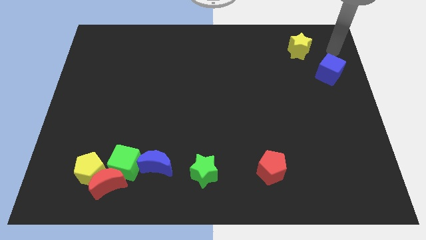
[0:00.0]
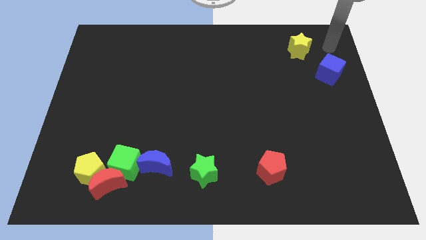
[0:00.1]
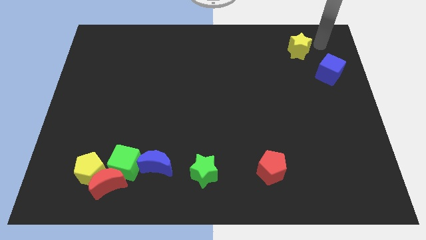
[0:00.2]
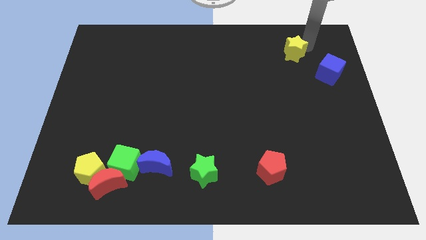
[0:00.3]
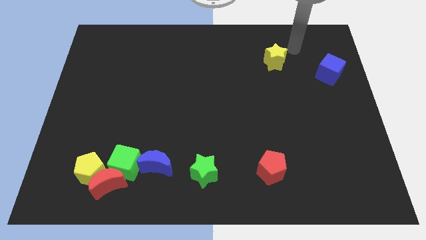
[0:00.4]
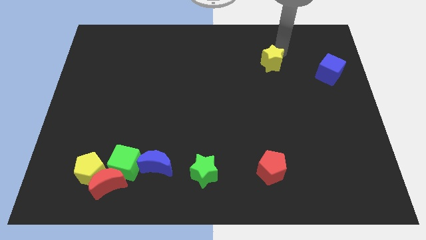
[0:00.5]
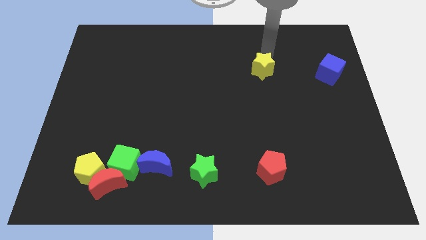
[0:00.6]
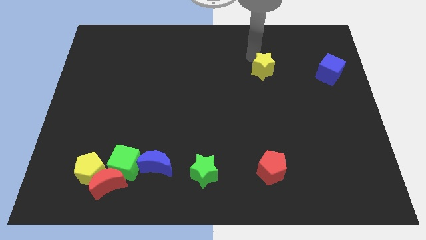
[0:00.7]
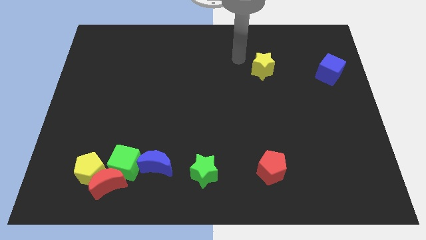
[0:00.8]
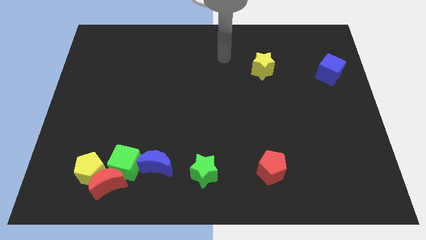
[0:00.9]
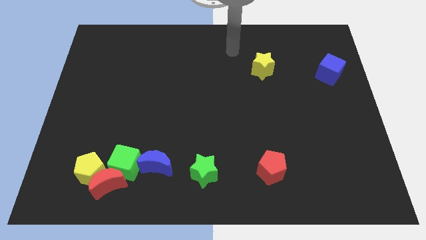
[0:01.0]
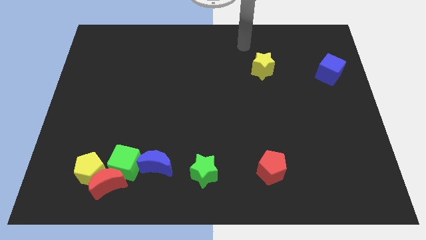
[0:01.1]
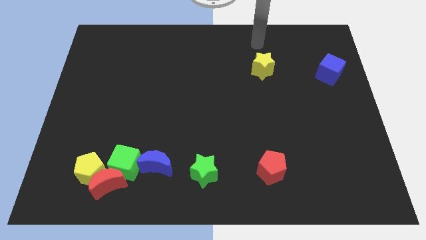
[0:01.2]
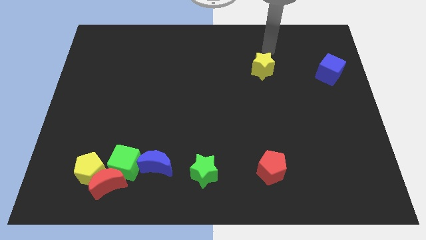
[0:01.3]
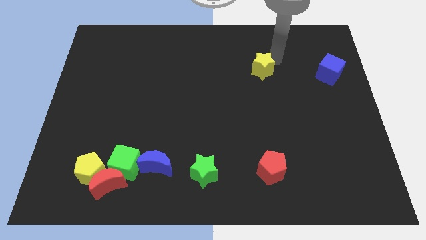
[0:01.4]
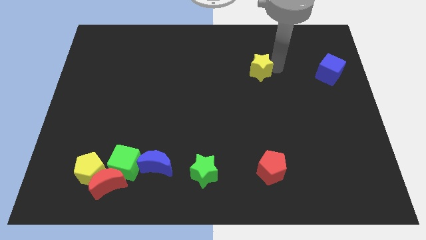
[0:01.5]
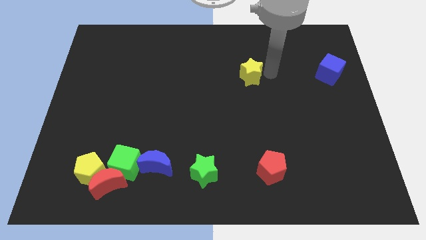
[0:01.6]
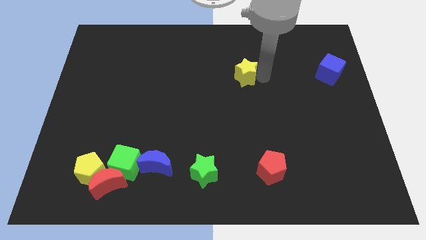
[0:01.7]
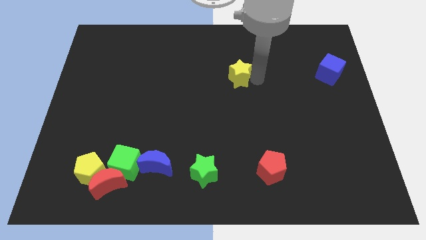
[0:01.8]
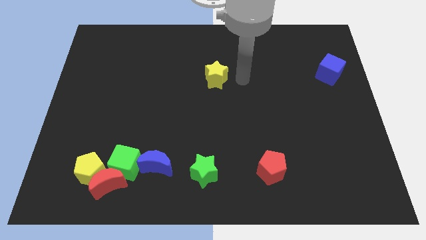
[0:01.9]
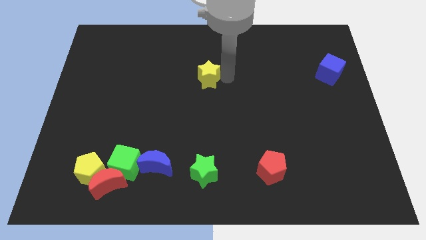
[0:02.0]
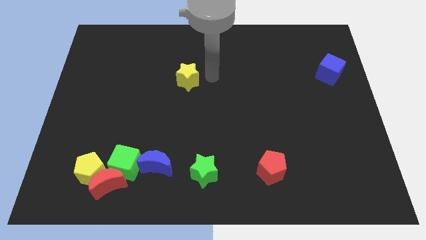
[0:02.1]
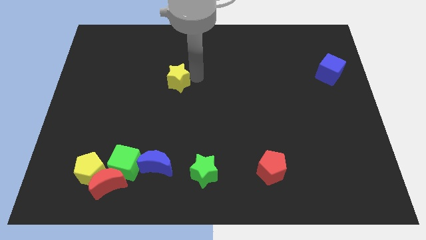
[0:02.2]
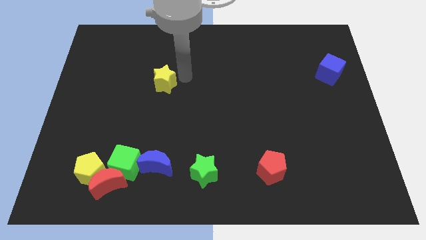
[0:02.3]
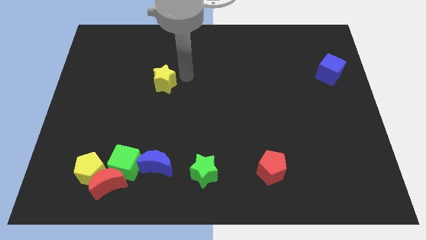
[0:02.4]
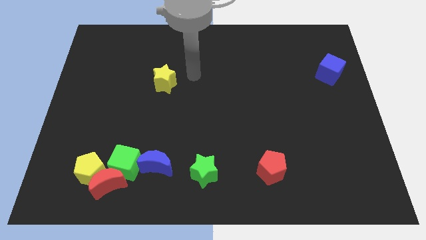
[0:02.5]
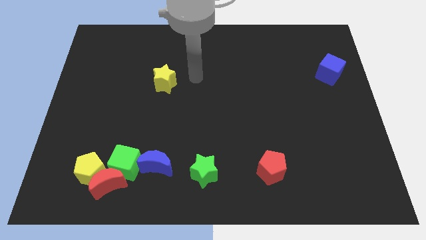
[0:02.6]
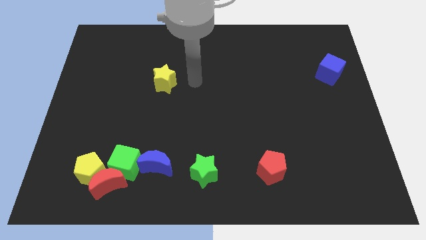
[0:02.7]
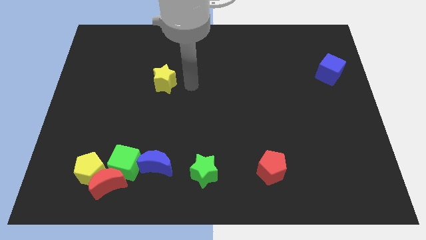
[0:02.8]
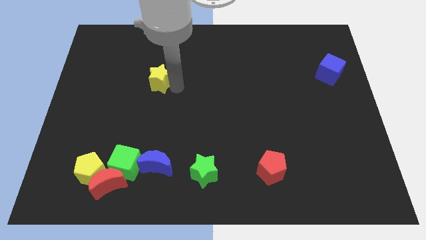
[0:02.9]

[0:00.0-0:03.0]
place the yellow star above the blue moon

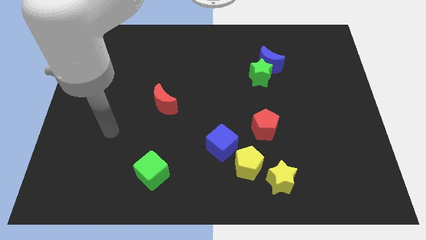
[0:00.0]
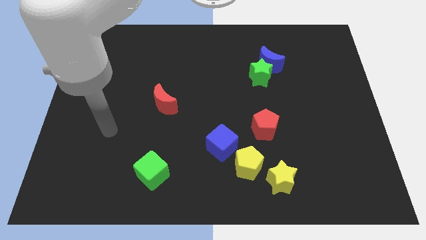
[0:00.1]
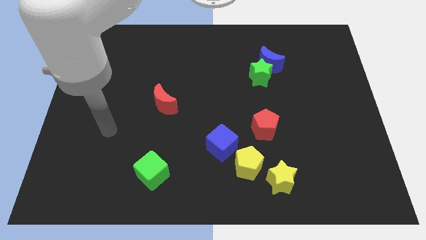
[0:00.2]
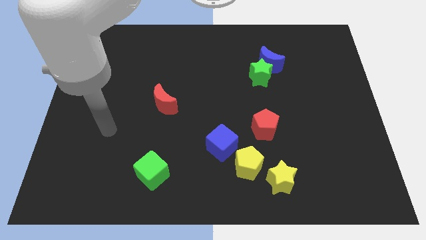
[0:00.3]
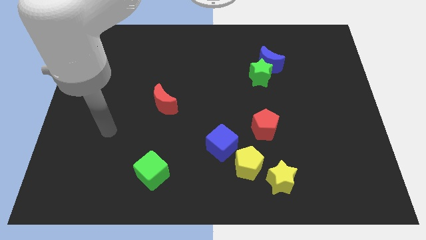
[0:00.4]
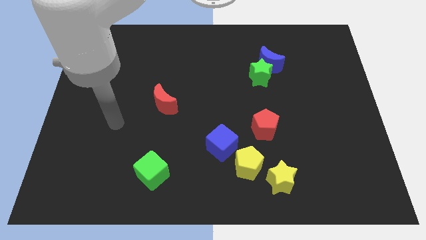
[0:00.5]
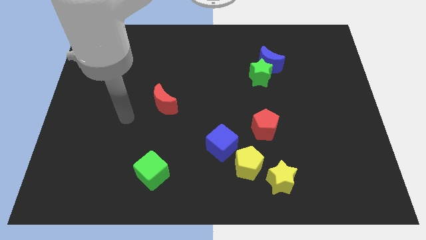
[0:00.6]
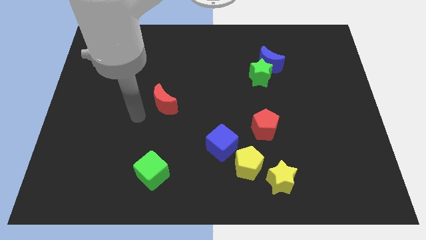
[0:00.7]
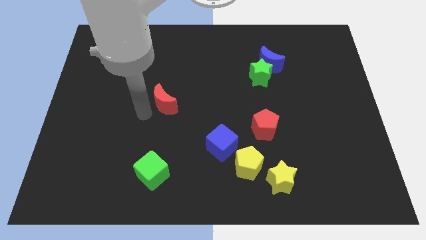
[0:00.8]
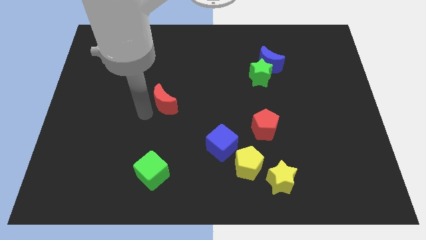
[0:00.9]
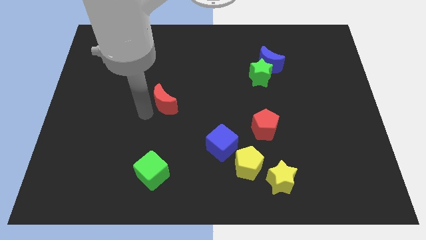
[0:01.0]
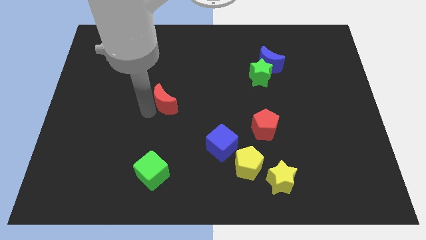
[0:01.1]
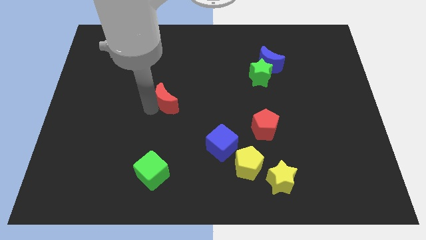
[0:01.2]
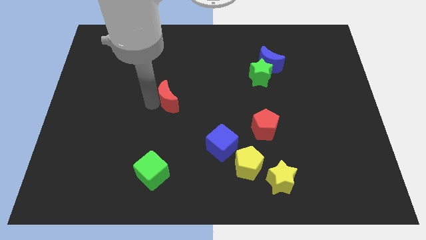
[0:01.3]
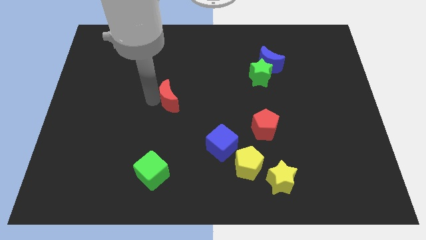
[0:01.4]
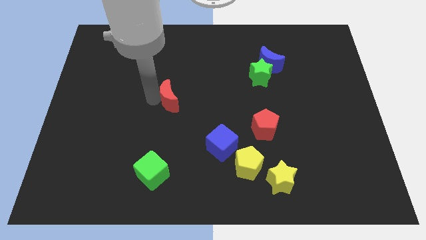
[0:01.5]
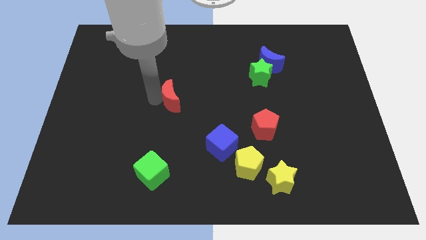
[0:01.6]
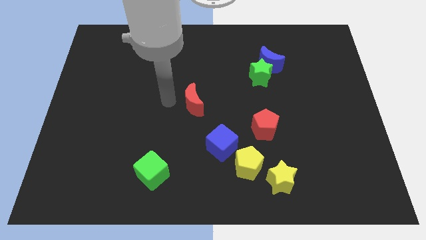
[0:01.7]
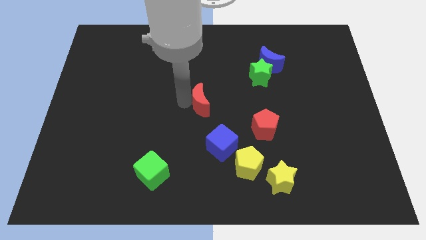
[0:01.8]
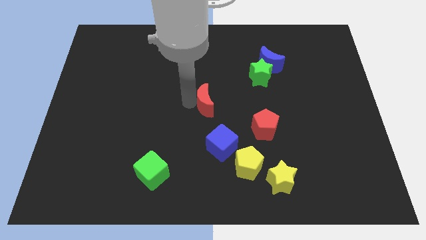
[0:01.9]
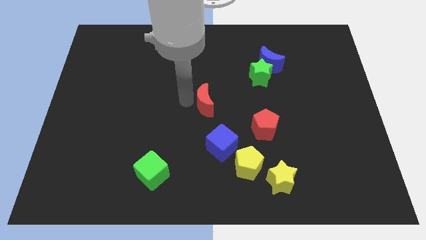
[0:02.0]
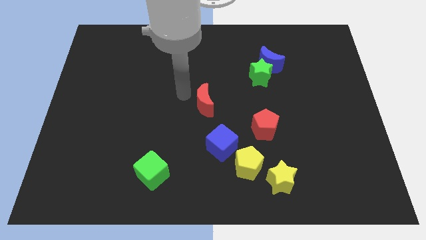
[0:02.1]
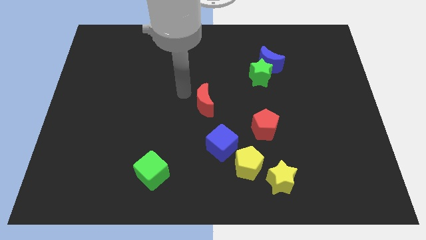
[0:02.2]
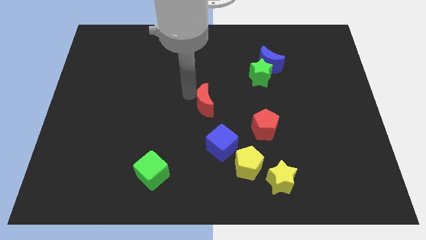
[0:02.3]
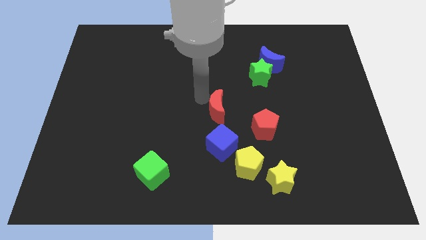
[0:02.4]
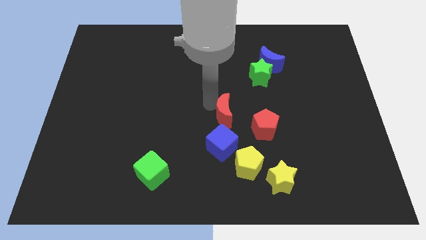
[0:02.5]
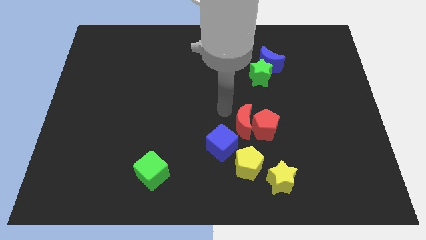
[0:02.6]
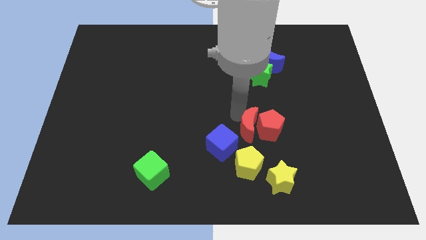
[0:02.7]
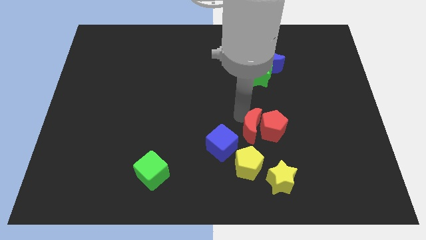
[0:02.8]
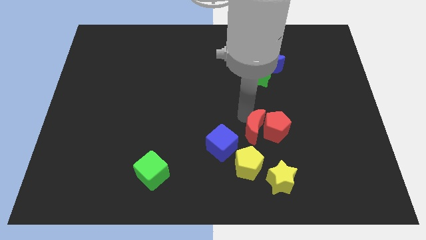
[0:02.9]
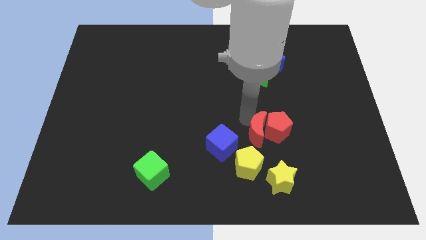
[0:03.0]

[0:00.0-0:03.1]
move red moon into the red pentagon

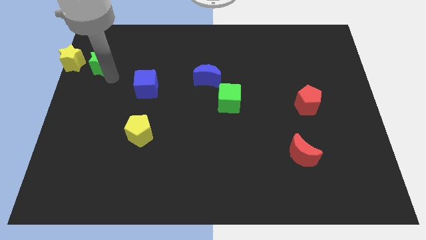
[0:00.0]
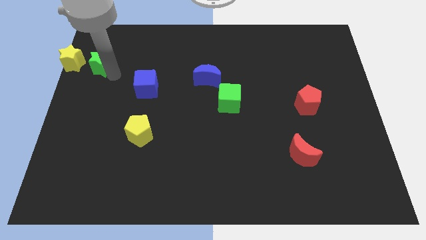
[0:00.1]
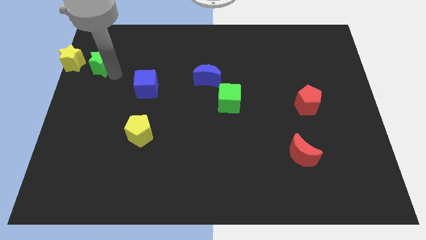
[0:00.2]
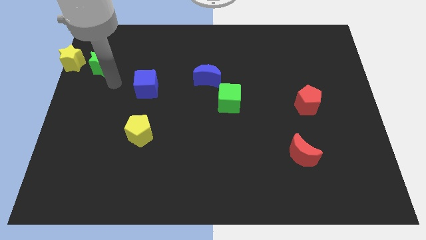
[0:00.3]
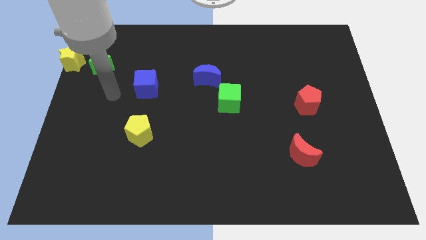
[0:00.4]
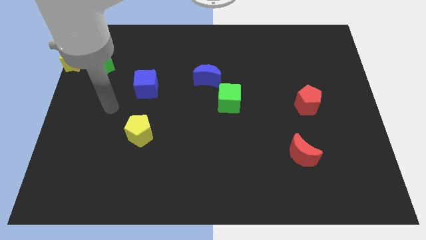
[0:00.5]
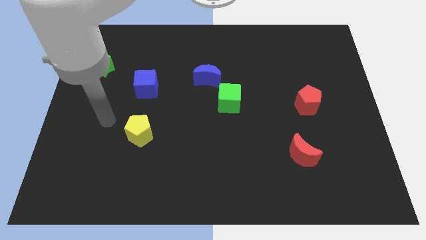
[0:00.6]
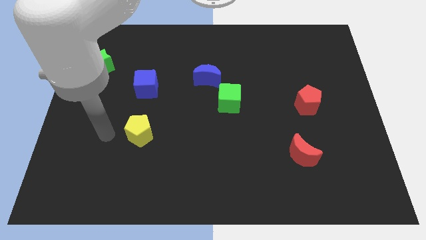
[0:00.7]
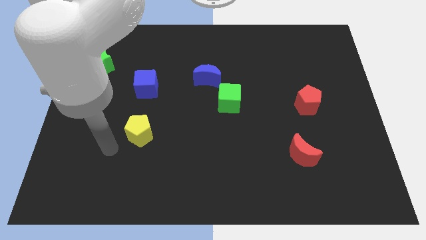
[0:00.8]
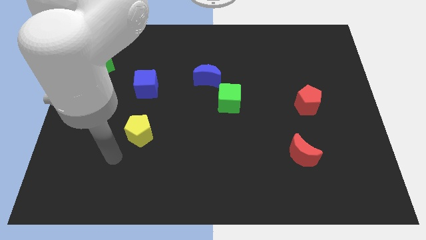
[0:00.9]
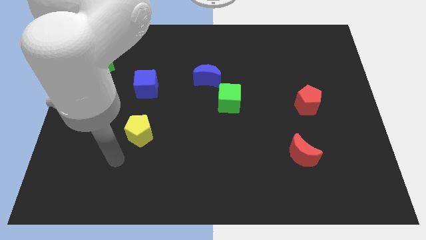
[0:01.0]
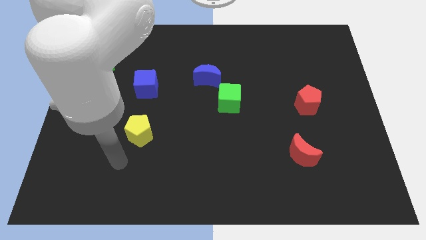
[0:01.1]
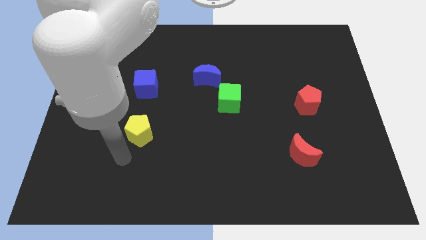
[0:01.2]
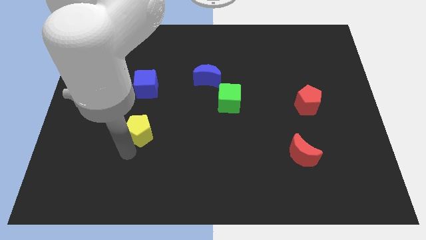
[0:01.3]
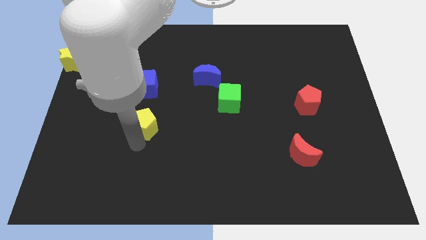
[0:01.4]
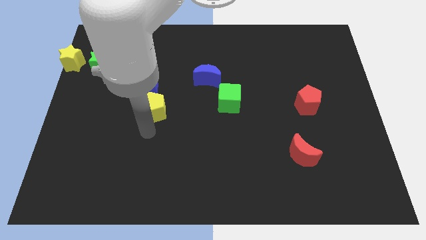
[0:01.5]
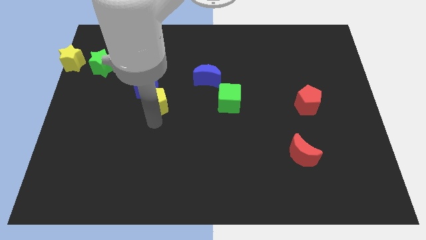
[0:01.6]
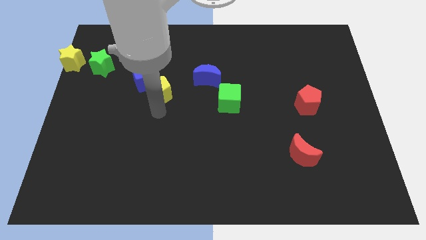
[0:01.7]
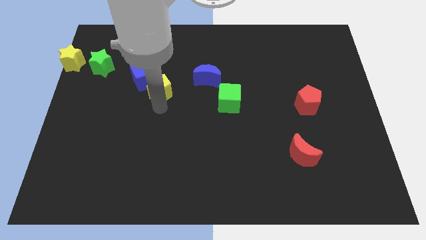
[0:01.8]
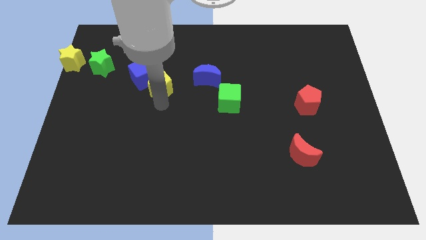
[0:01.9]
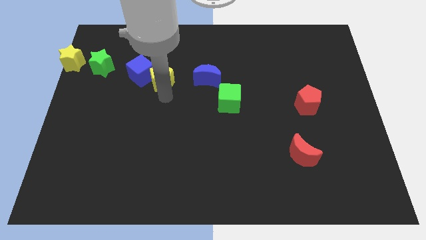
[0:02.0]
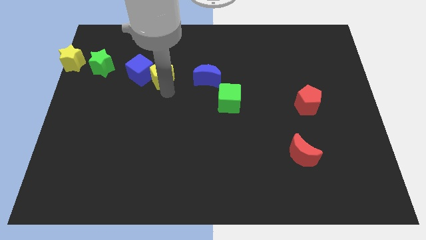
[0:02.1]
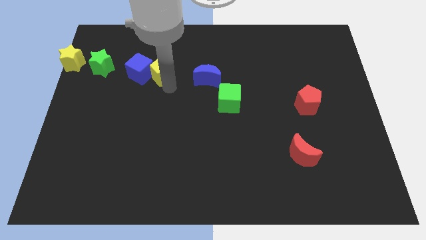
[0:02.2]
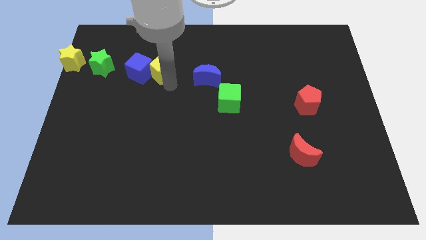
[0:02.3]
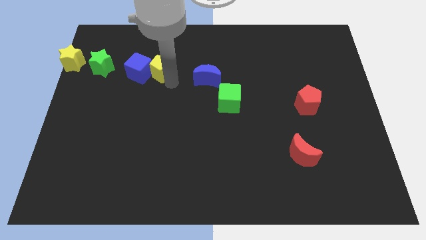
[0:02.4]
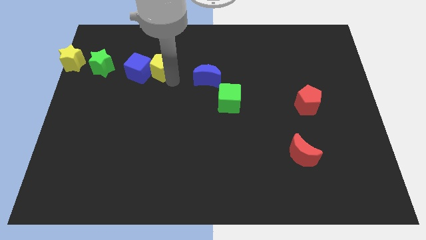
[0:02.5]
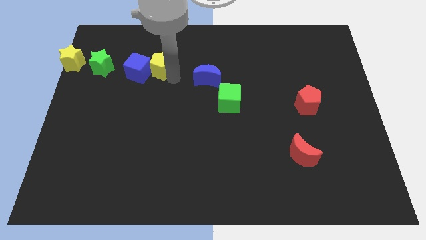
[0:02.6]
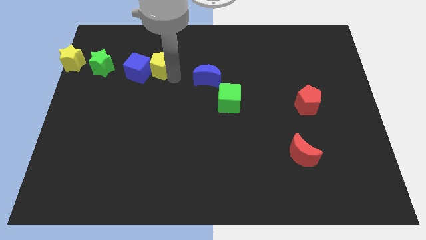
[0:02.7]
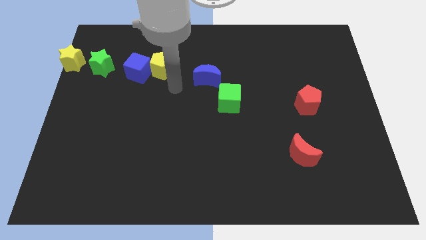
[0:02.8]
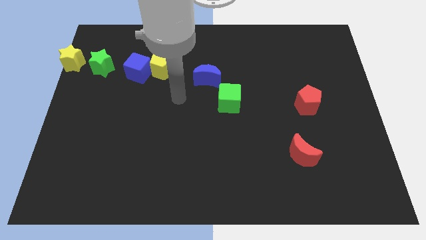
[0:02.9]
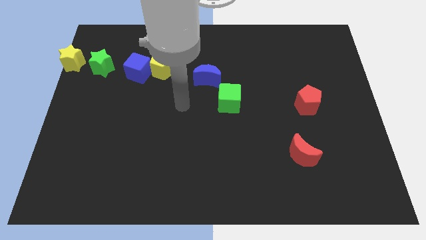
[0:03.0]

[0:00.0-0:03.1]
push the yellow pentagon into the blue cube
